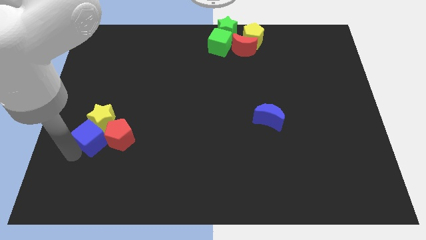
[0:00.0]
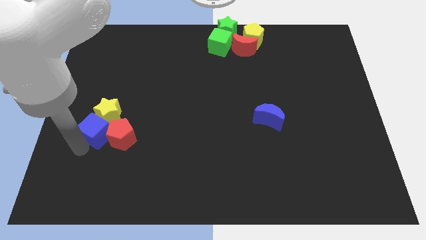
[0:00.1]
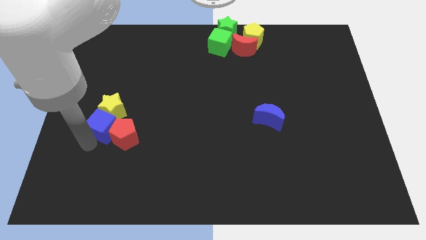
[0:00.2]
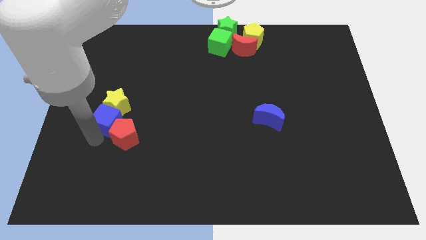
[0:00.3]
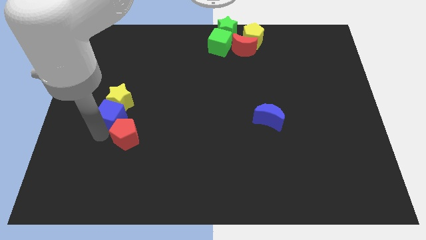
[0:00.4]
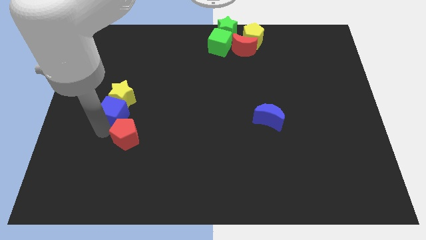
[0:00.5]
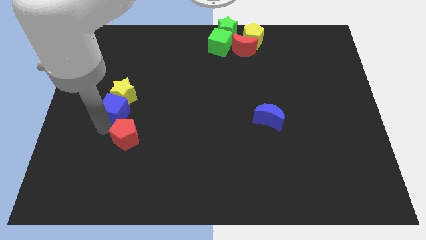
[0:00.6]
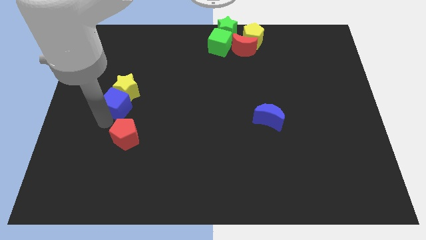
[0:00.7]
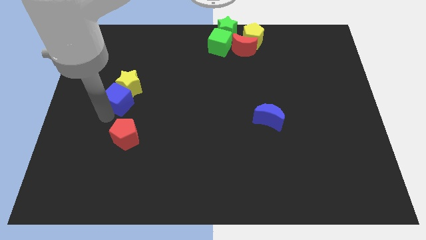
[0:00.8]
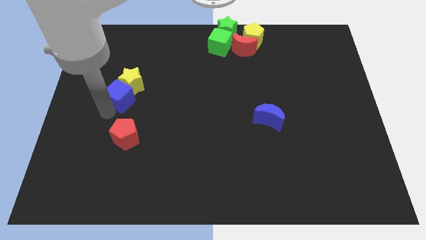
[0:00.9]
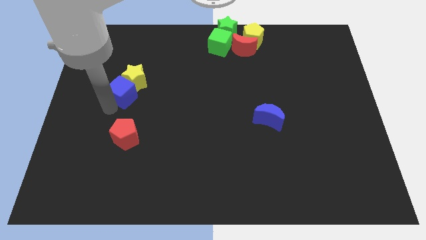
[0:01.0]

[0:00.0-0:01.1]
push blue cube in to yellow star

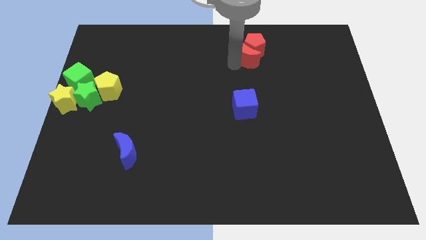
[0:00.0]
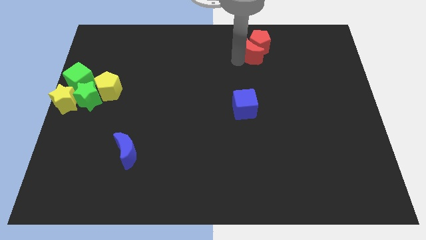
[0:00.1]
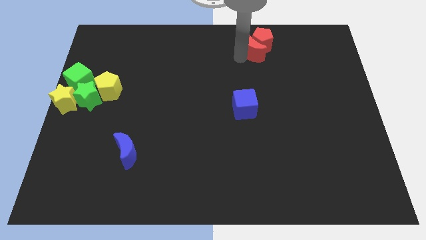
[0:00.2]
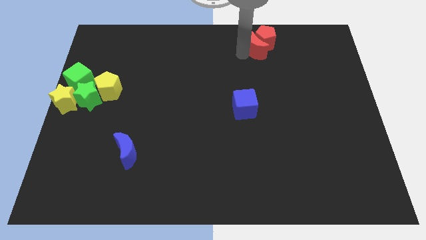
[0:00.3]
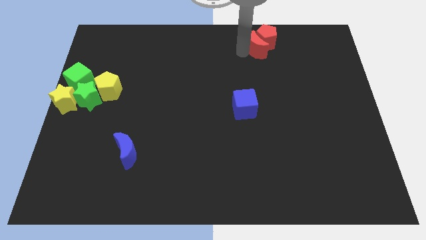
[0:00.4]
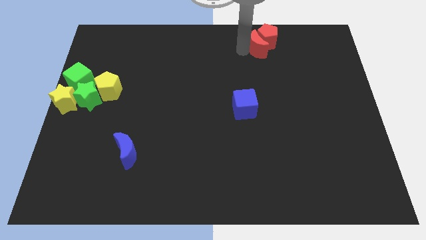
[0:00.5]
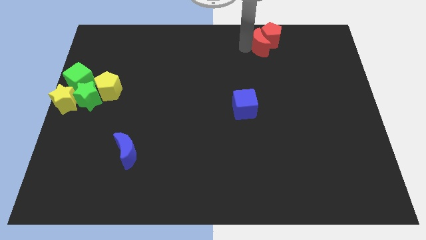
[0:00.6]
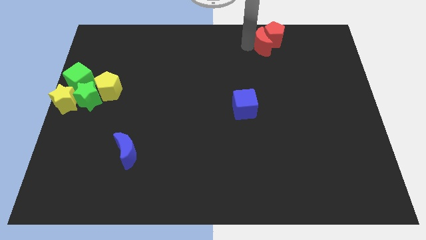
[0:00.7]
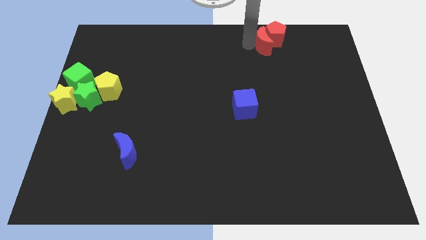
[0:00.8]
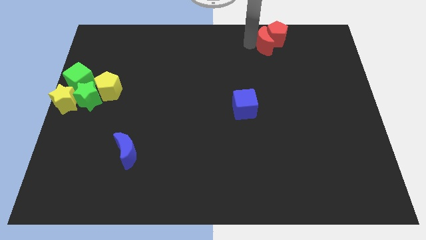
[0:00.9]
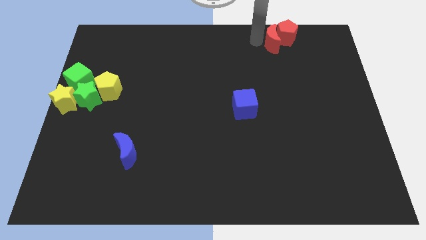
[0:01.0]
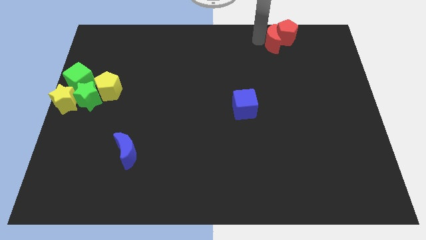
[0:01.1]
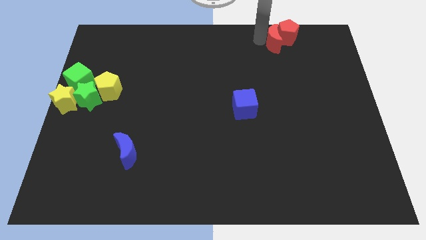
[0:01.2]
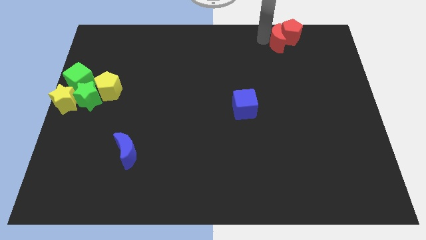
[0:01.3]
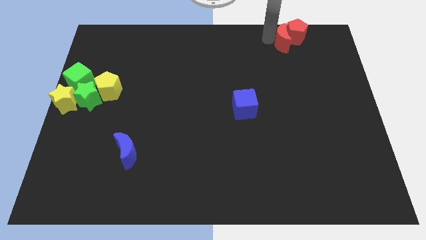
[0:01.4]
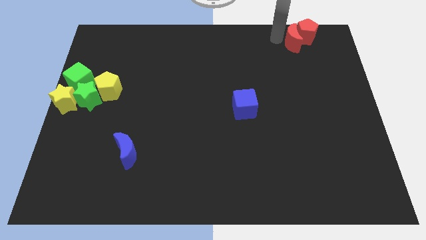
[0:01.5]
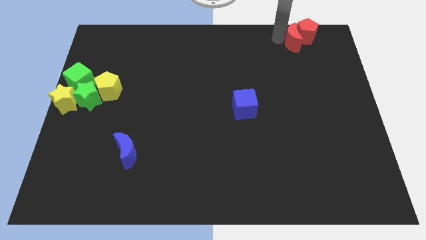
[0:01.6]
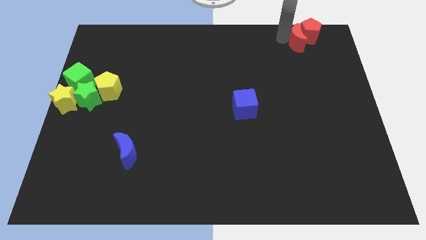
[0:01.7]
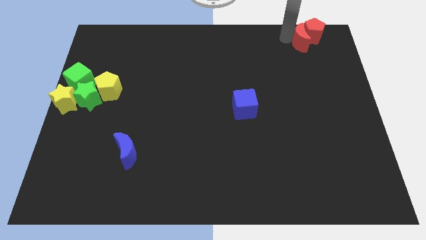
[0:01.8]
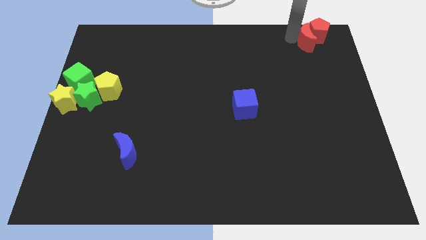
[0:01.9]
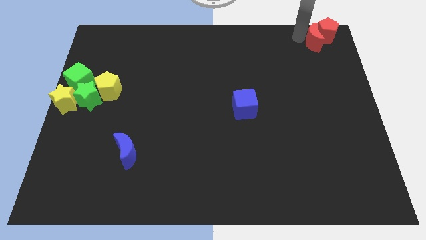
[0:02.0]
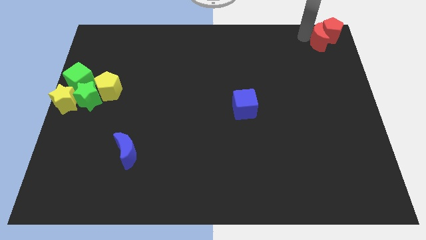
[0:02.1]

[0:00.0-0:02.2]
move the red crescent along with the red pentagon to the top right corner of the board

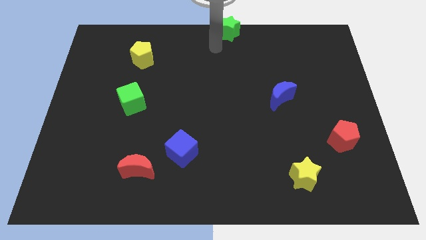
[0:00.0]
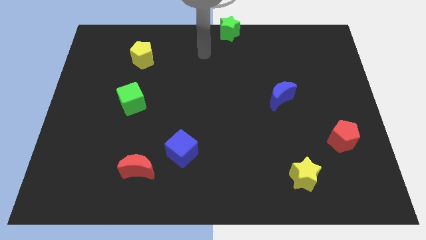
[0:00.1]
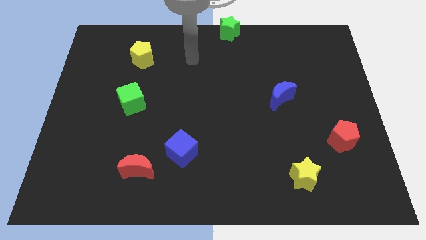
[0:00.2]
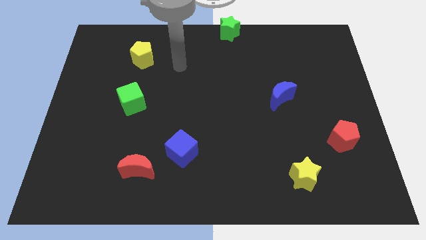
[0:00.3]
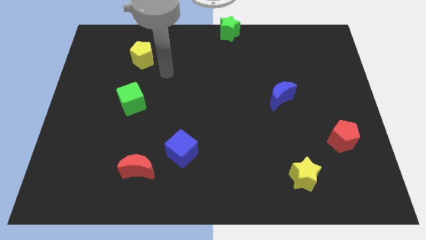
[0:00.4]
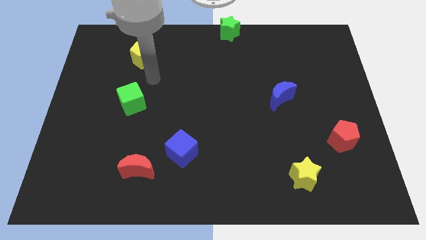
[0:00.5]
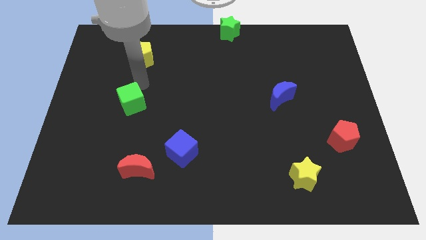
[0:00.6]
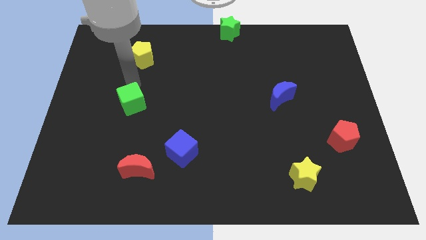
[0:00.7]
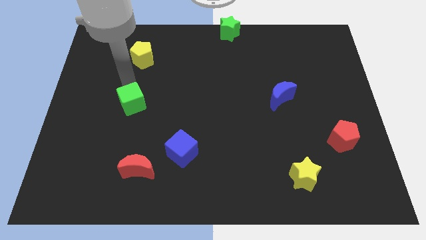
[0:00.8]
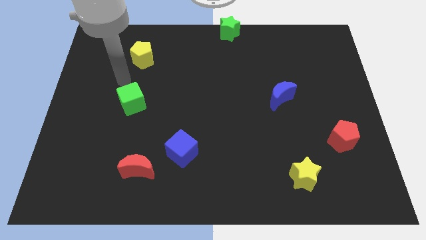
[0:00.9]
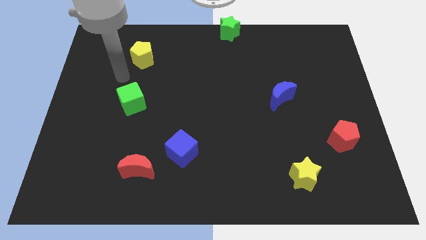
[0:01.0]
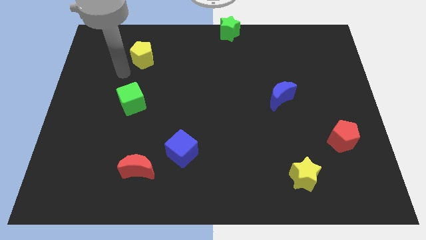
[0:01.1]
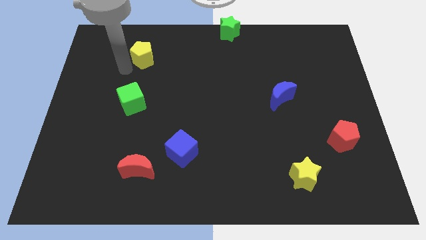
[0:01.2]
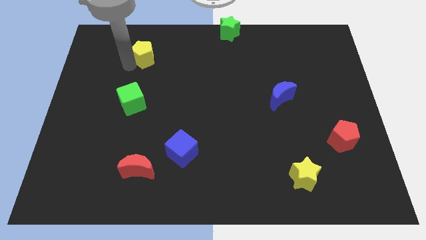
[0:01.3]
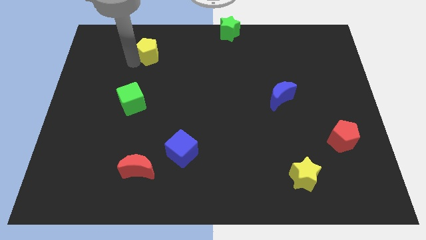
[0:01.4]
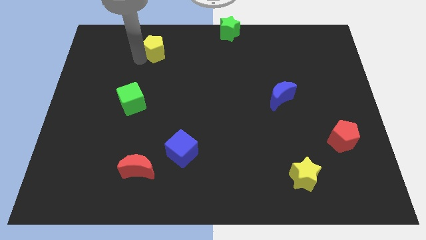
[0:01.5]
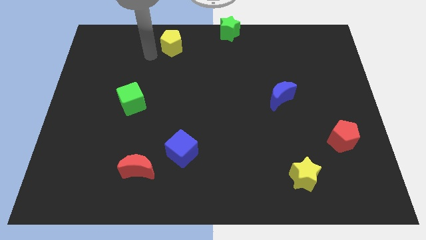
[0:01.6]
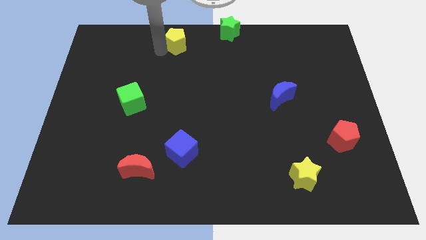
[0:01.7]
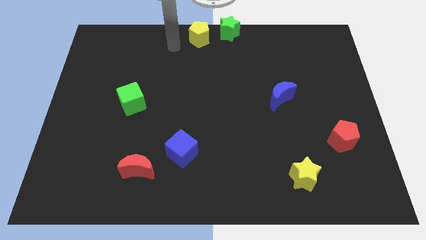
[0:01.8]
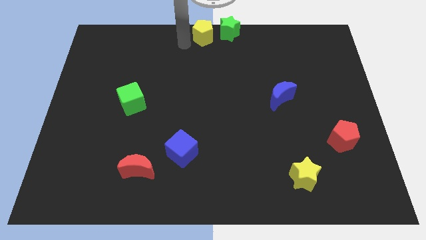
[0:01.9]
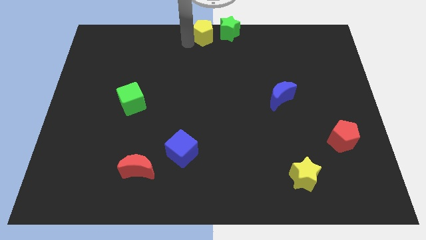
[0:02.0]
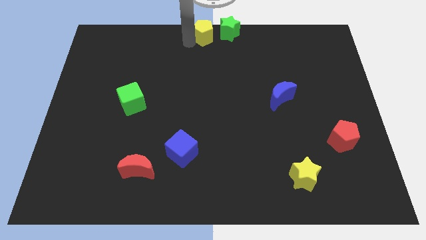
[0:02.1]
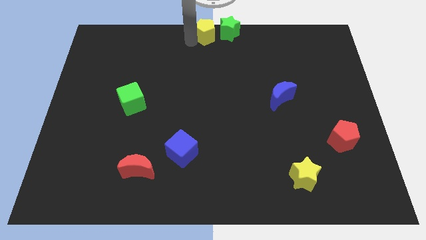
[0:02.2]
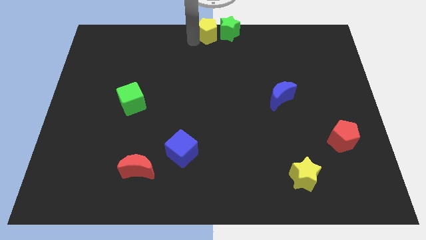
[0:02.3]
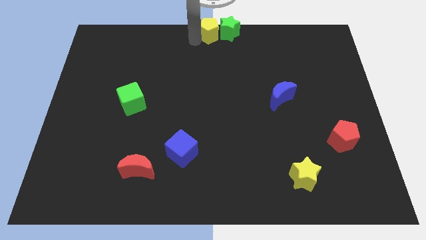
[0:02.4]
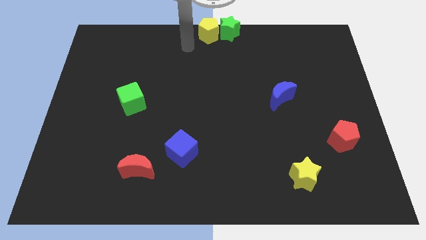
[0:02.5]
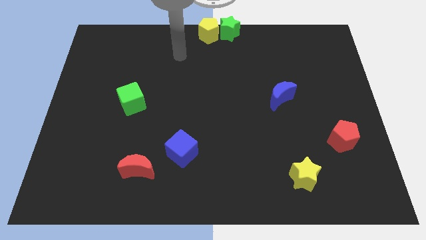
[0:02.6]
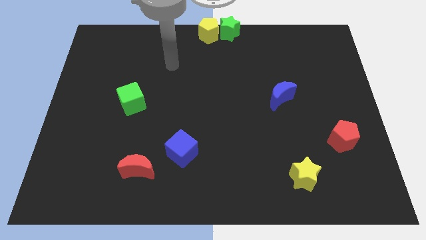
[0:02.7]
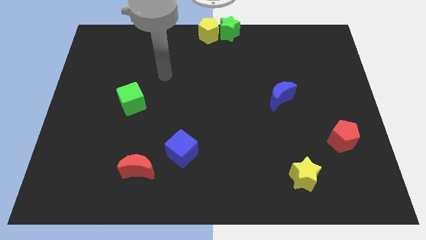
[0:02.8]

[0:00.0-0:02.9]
place yellow pentagon close to green star at the top

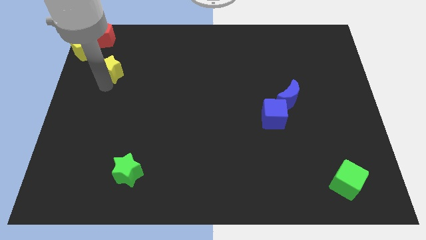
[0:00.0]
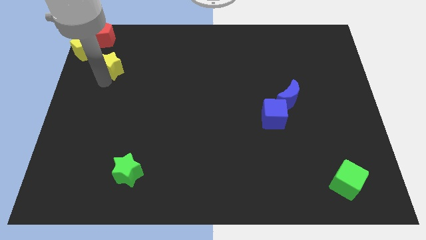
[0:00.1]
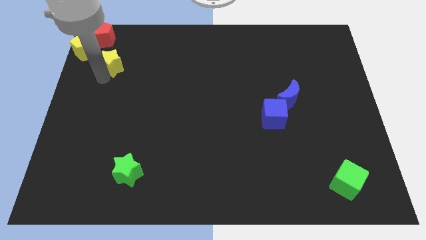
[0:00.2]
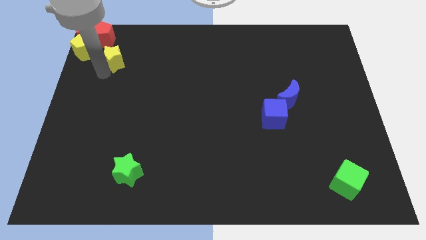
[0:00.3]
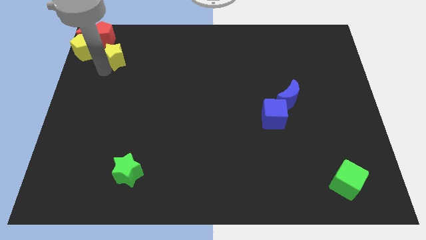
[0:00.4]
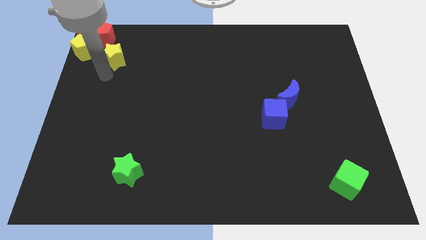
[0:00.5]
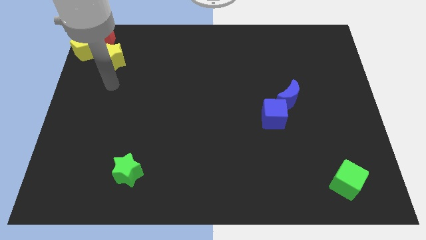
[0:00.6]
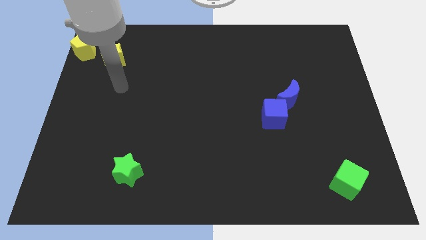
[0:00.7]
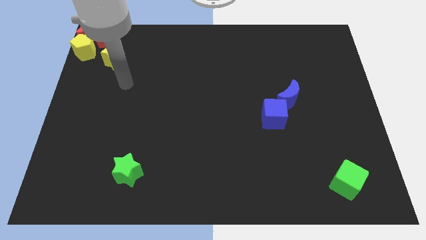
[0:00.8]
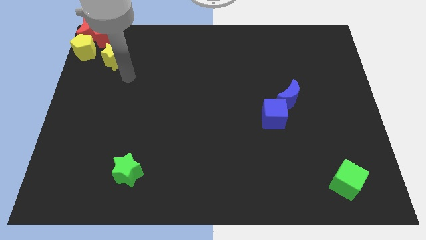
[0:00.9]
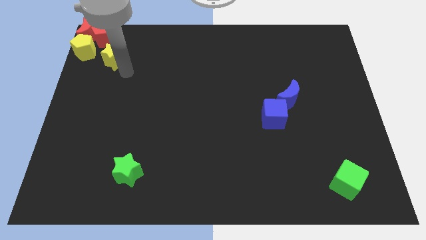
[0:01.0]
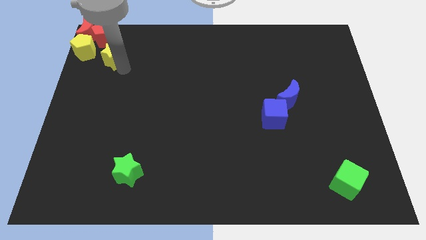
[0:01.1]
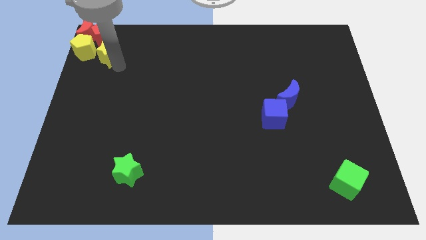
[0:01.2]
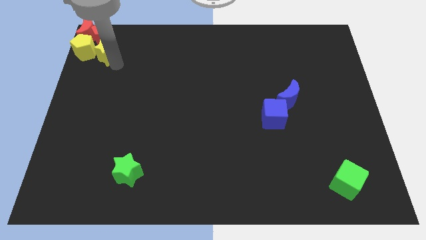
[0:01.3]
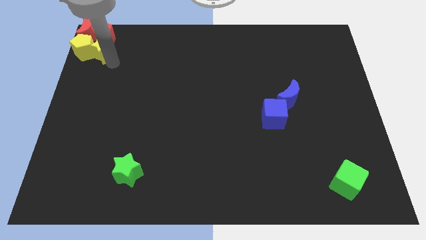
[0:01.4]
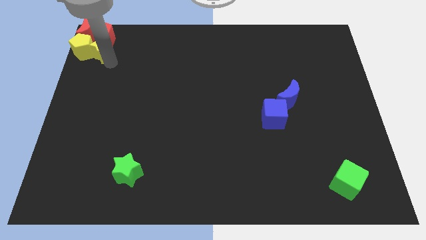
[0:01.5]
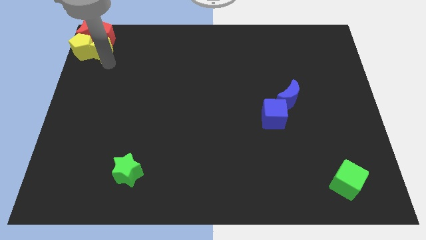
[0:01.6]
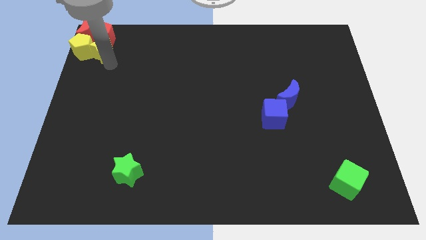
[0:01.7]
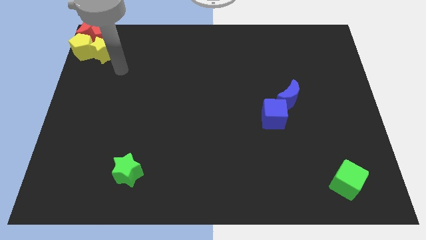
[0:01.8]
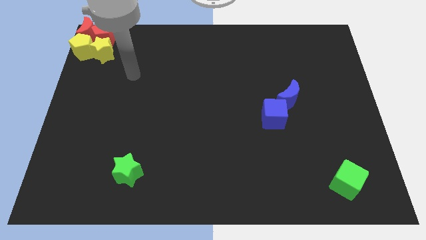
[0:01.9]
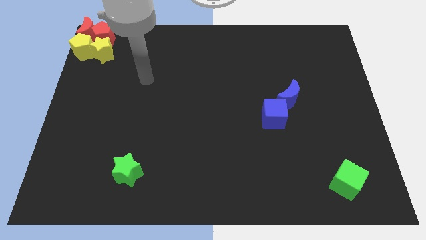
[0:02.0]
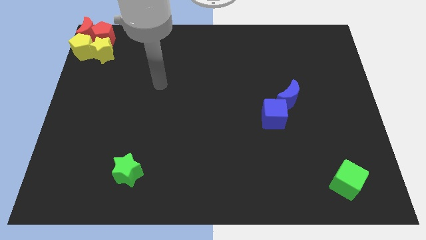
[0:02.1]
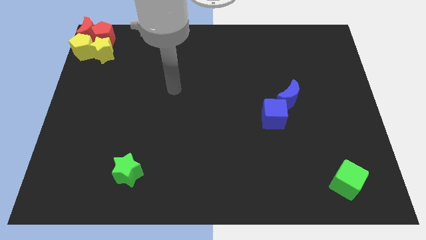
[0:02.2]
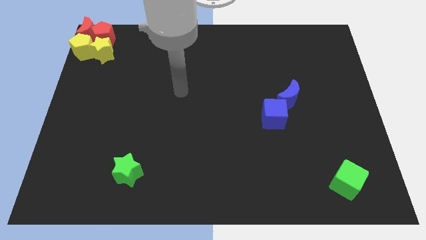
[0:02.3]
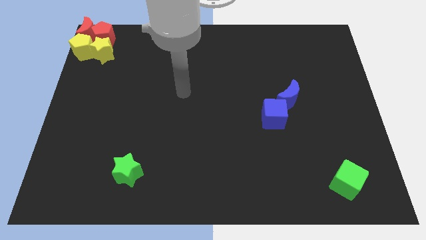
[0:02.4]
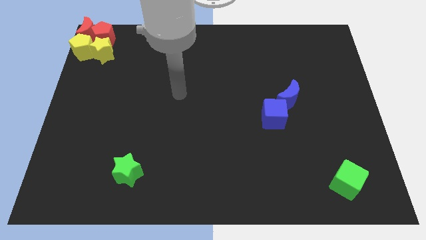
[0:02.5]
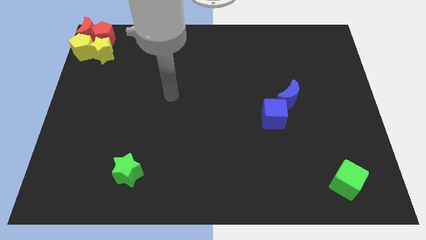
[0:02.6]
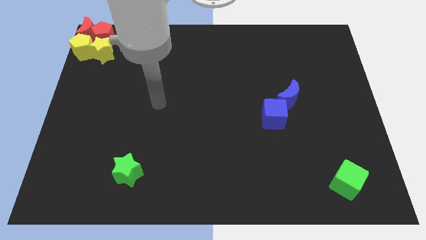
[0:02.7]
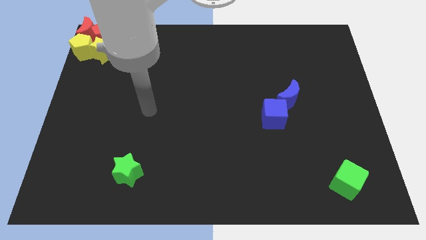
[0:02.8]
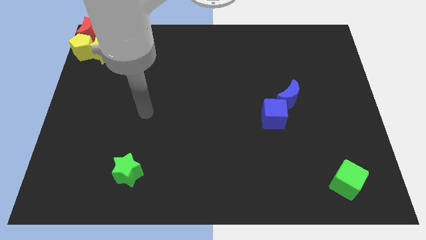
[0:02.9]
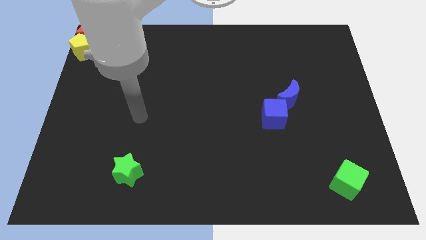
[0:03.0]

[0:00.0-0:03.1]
push the yellow star right of the yellow pentagon
